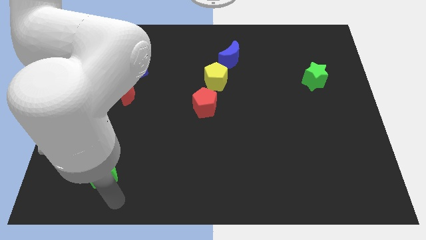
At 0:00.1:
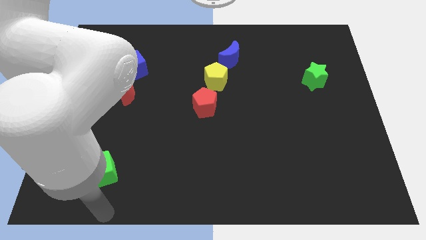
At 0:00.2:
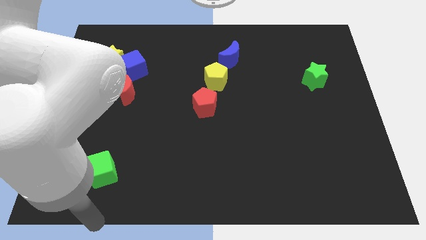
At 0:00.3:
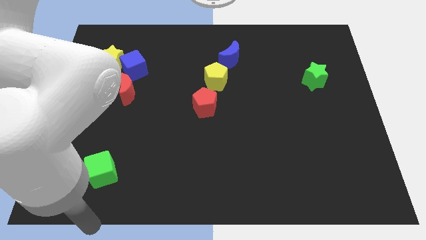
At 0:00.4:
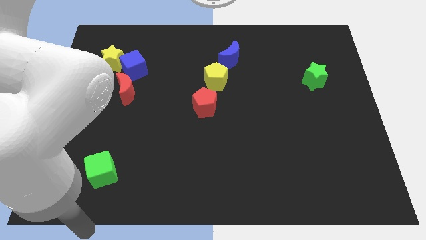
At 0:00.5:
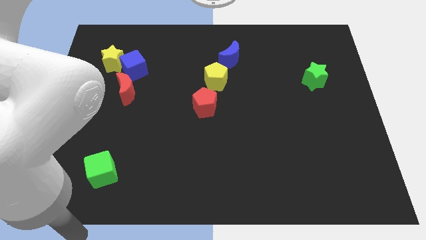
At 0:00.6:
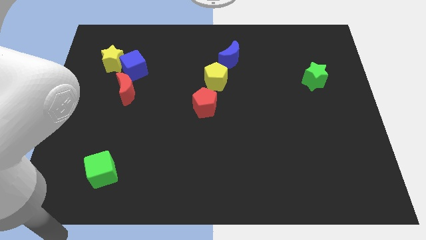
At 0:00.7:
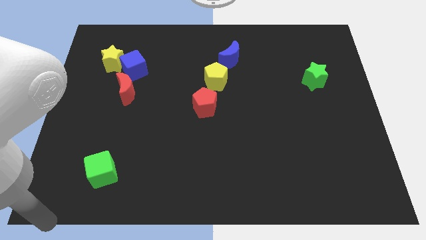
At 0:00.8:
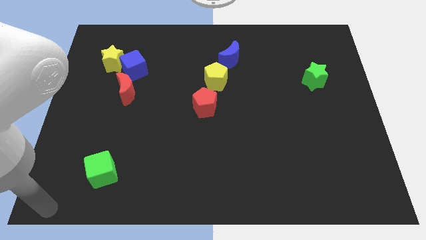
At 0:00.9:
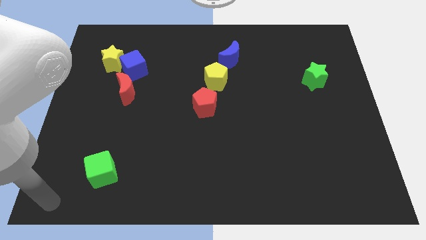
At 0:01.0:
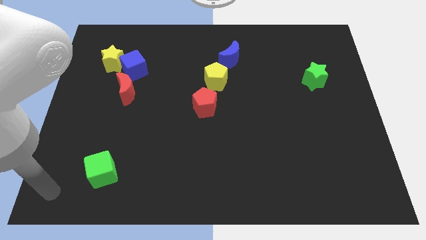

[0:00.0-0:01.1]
move the arm to the bottom left of the board

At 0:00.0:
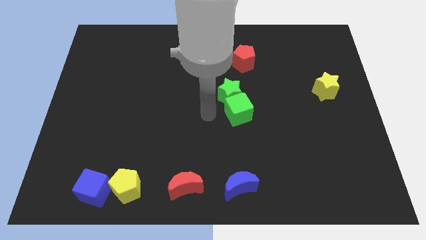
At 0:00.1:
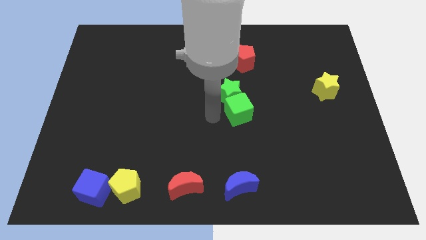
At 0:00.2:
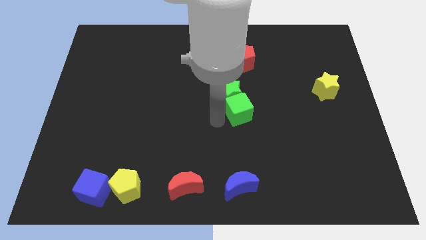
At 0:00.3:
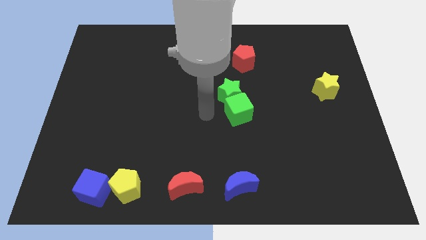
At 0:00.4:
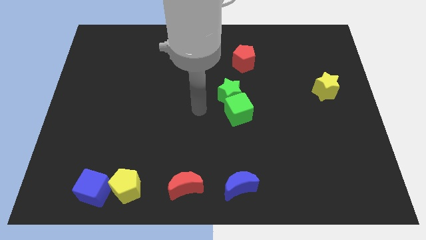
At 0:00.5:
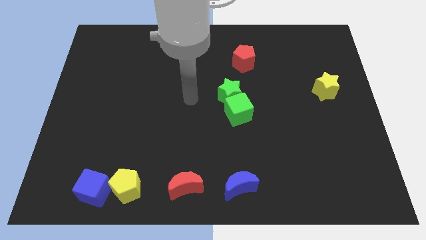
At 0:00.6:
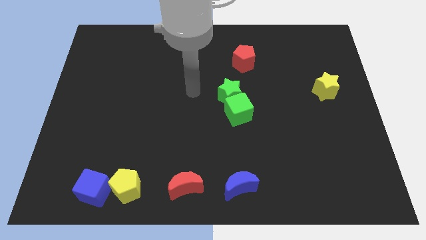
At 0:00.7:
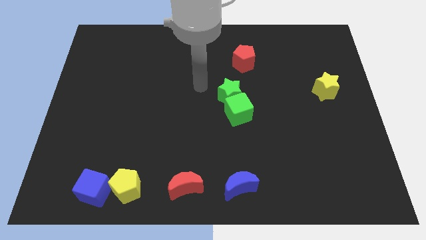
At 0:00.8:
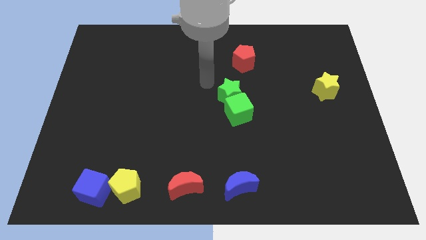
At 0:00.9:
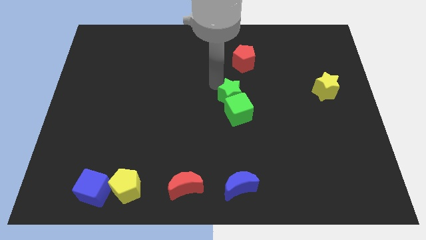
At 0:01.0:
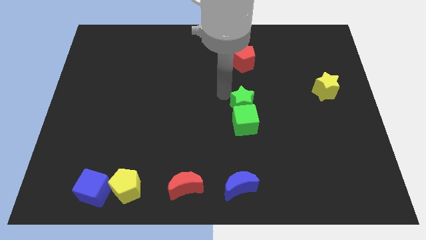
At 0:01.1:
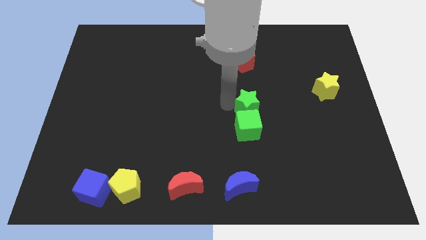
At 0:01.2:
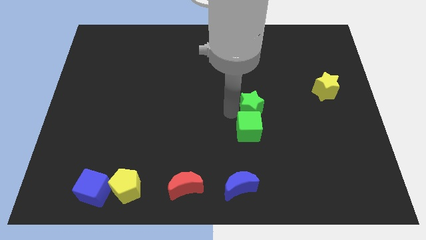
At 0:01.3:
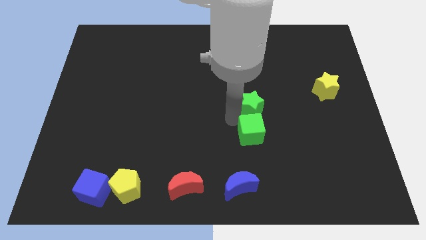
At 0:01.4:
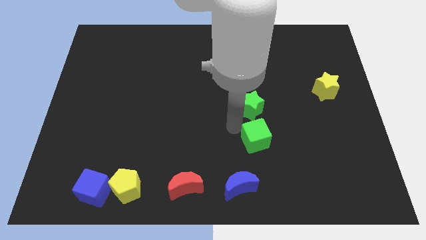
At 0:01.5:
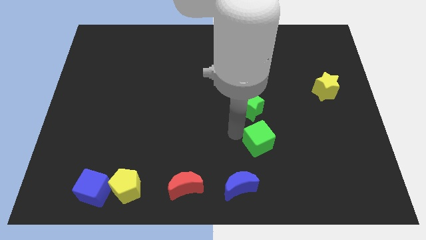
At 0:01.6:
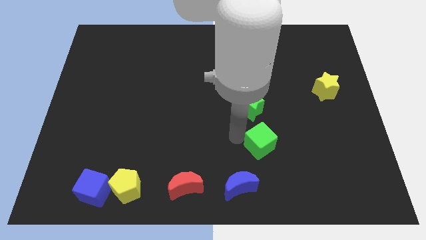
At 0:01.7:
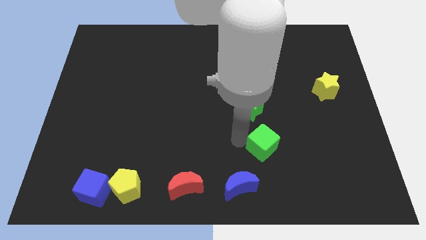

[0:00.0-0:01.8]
separate green star and the green cube

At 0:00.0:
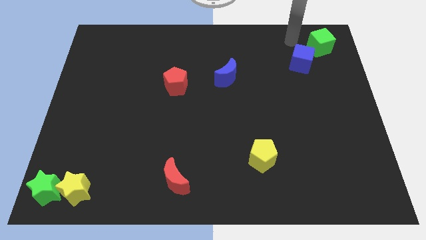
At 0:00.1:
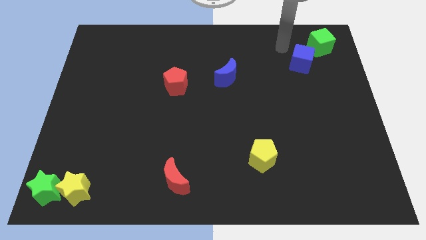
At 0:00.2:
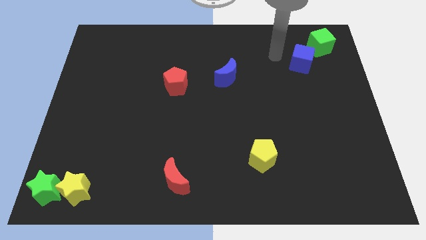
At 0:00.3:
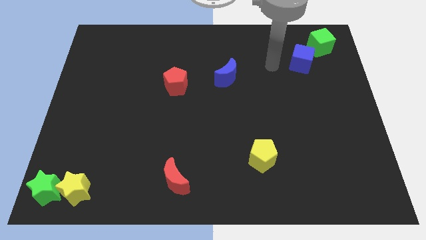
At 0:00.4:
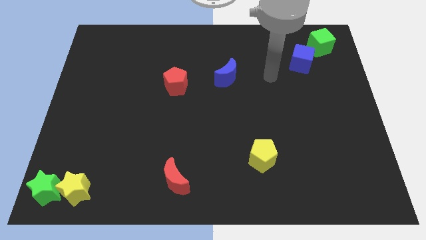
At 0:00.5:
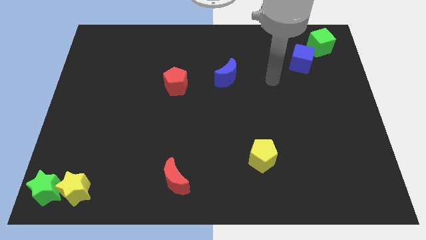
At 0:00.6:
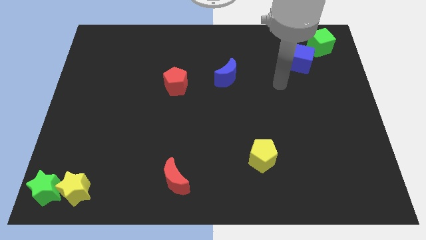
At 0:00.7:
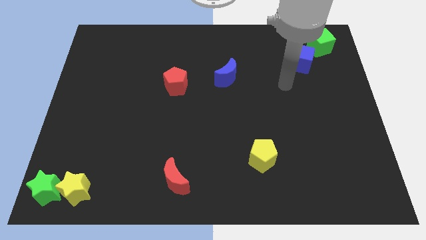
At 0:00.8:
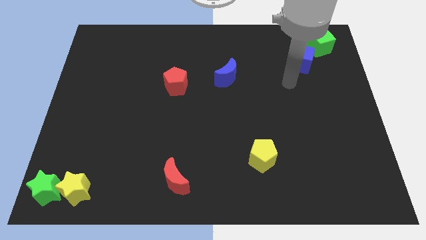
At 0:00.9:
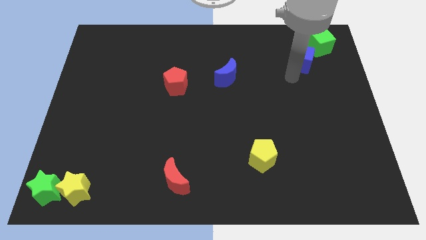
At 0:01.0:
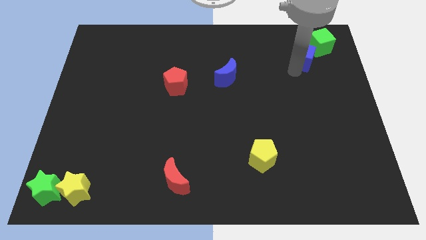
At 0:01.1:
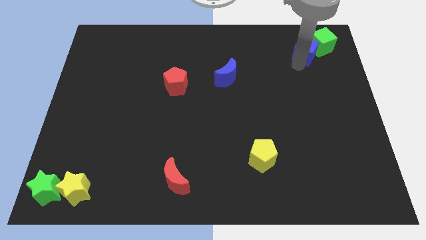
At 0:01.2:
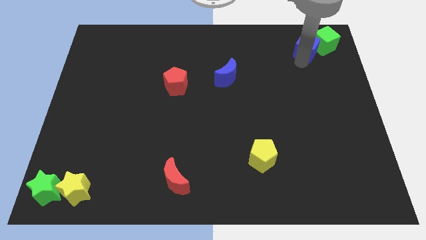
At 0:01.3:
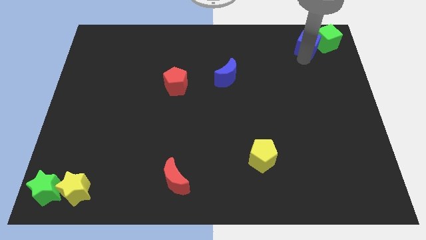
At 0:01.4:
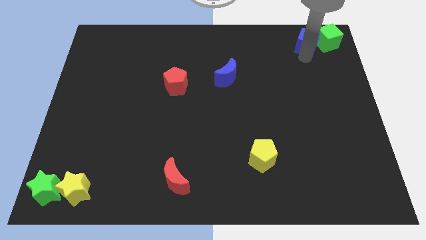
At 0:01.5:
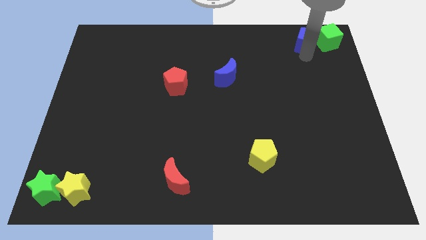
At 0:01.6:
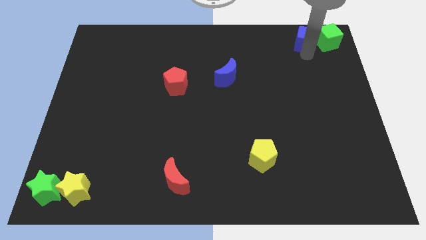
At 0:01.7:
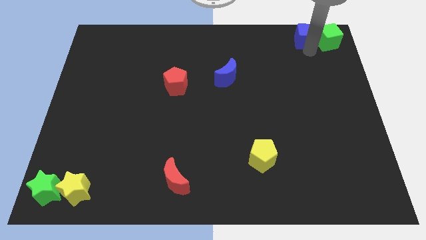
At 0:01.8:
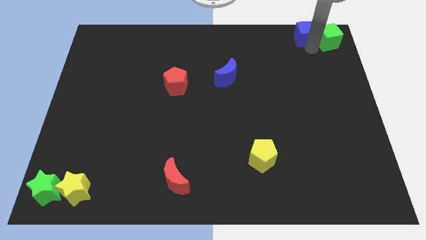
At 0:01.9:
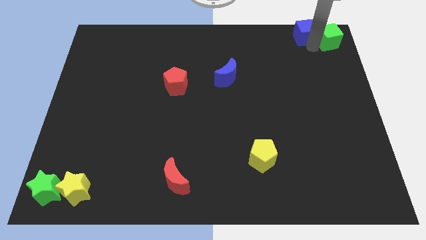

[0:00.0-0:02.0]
move the blue and green cubes towards the top right

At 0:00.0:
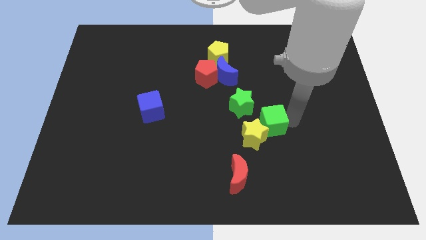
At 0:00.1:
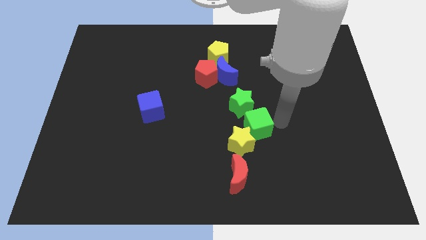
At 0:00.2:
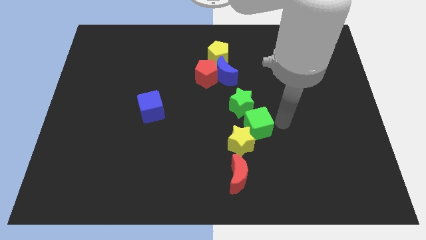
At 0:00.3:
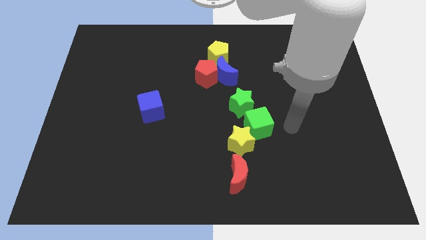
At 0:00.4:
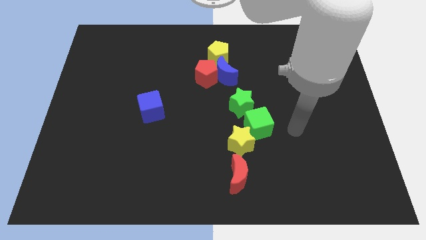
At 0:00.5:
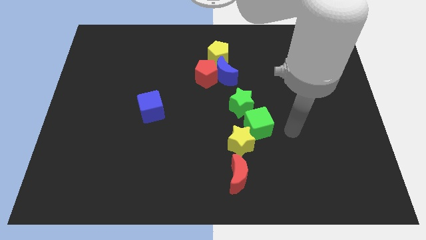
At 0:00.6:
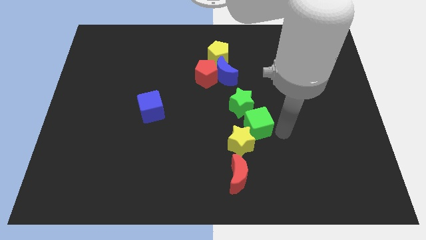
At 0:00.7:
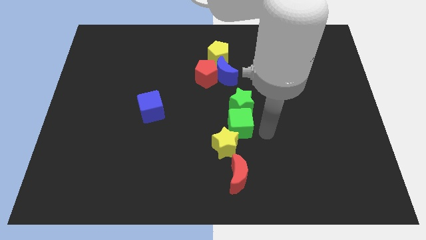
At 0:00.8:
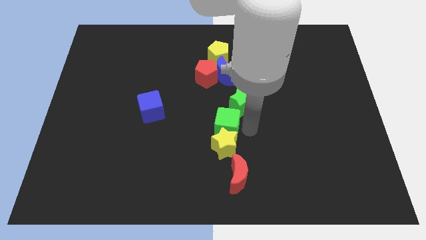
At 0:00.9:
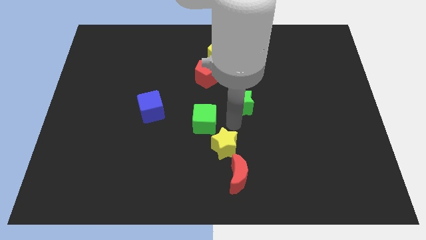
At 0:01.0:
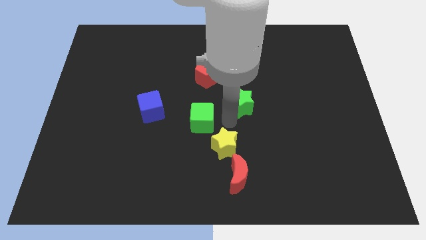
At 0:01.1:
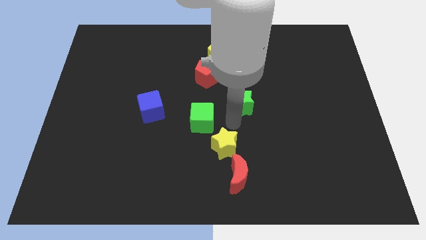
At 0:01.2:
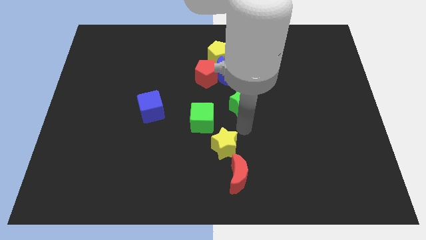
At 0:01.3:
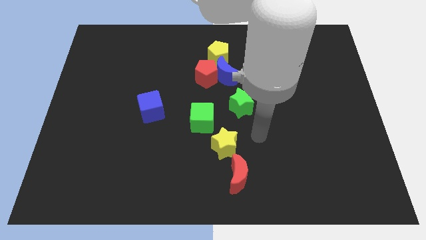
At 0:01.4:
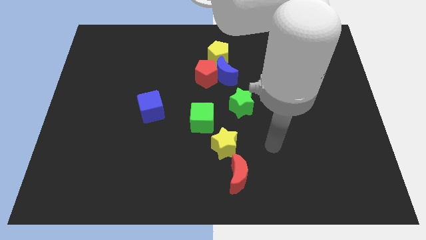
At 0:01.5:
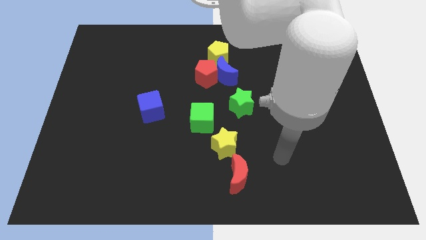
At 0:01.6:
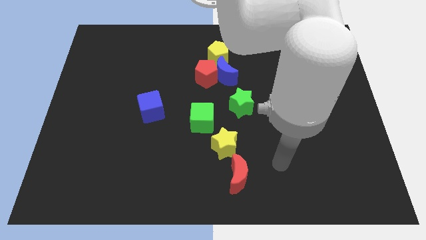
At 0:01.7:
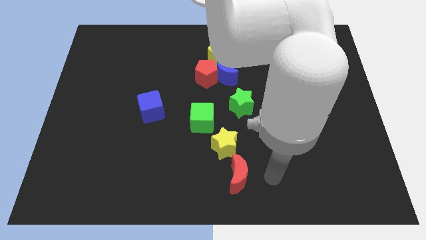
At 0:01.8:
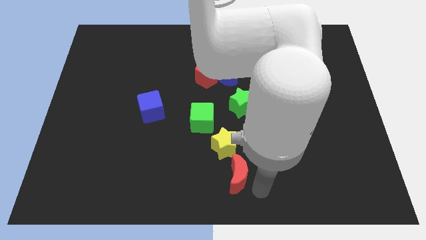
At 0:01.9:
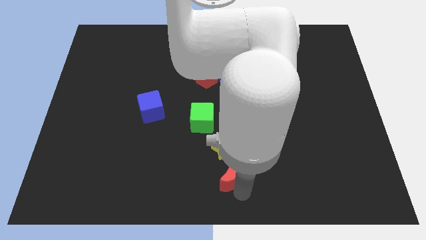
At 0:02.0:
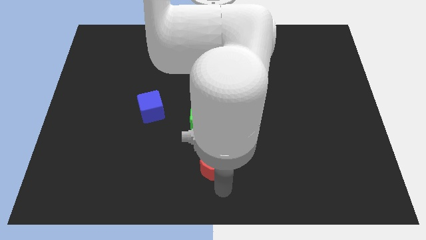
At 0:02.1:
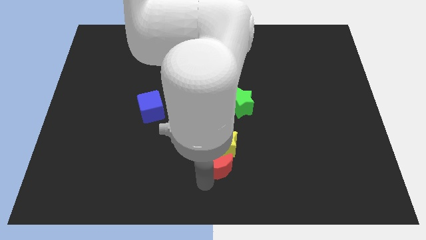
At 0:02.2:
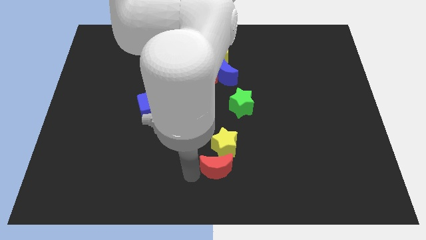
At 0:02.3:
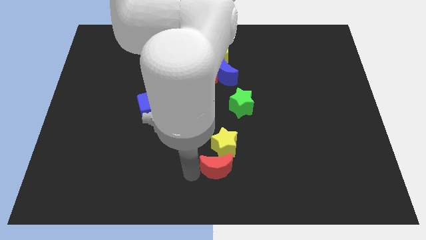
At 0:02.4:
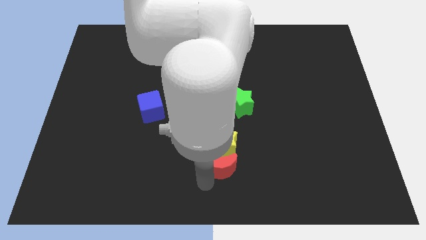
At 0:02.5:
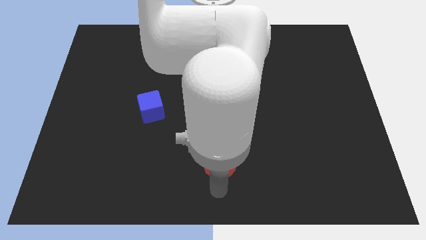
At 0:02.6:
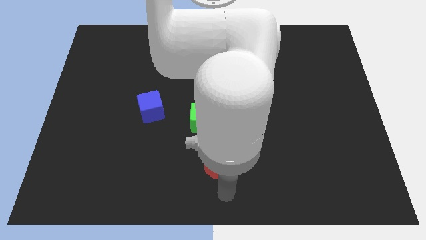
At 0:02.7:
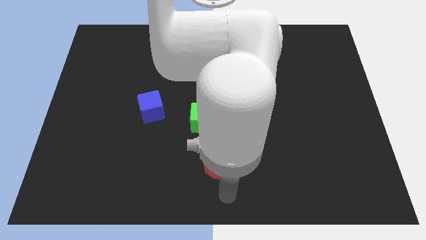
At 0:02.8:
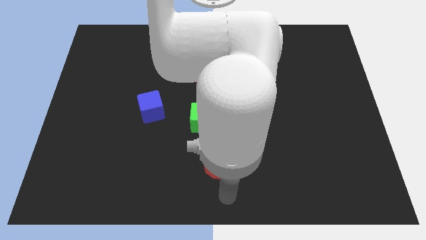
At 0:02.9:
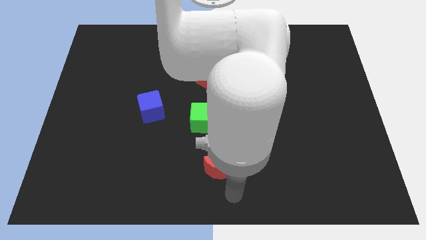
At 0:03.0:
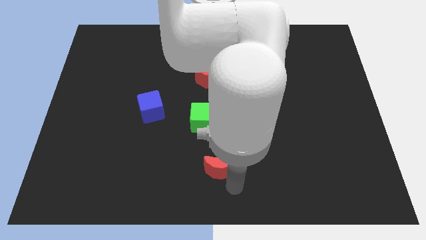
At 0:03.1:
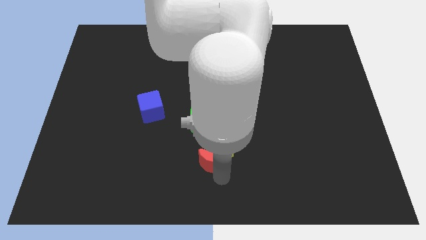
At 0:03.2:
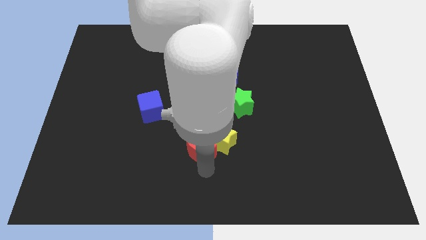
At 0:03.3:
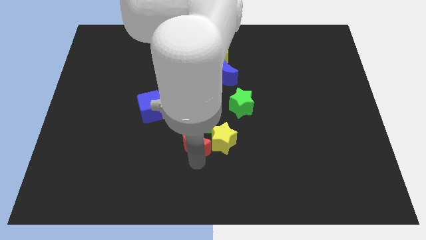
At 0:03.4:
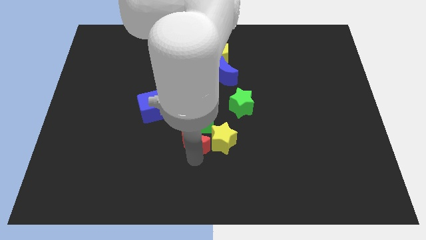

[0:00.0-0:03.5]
move red moon to the left of yellow star

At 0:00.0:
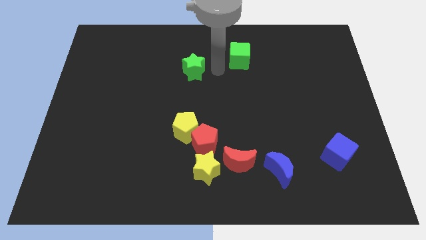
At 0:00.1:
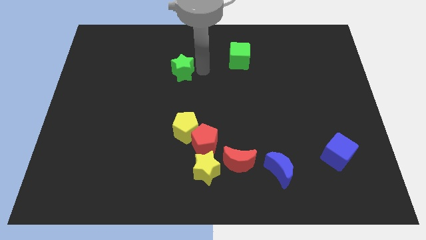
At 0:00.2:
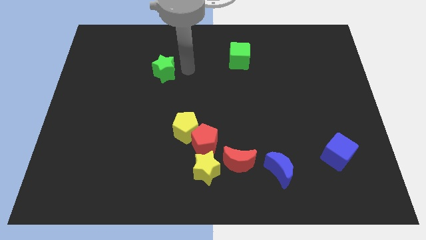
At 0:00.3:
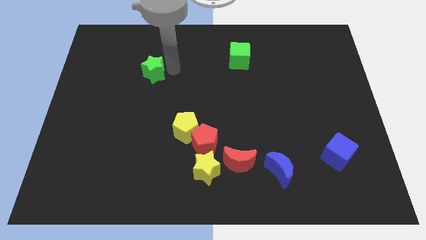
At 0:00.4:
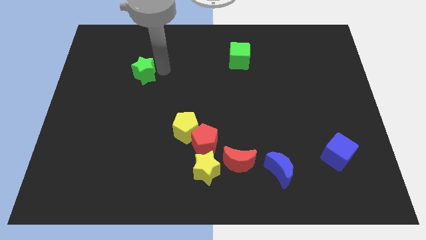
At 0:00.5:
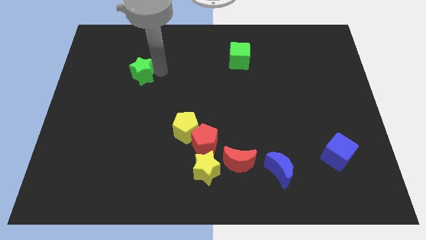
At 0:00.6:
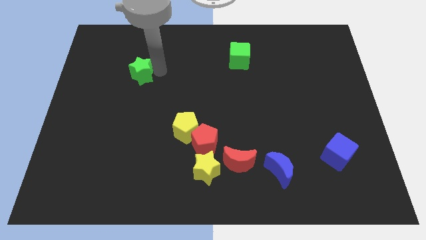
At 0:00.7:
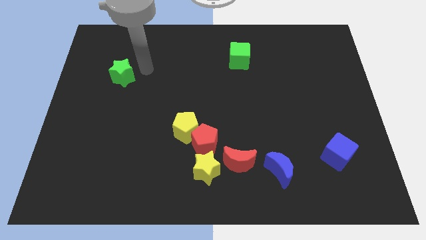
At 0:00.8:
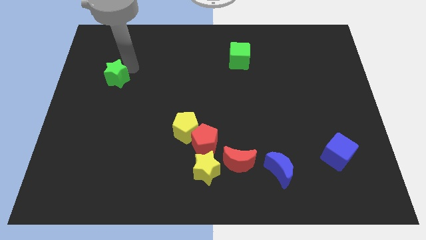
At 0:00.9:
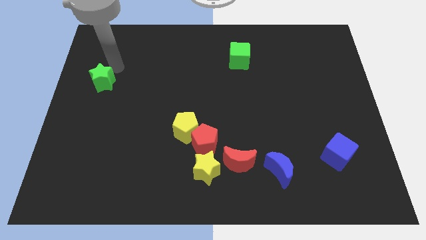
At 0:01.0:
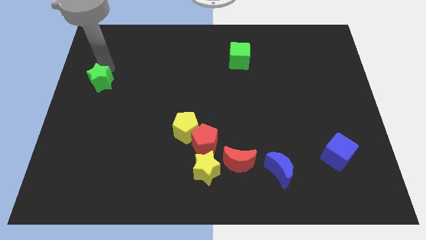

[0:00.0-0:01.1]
move the green star to the left center of the board
